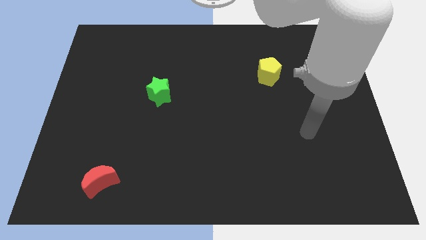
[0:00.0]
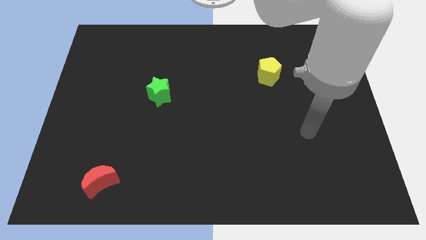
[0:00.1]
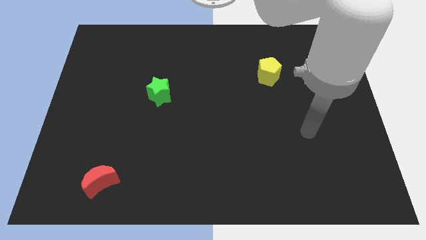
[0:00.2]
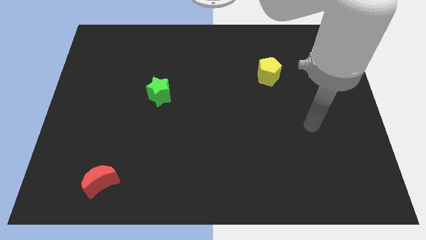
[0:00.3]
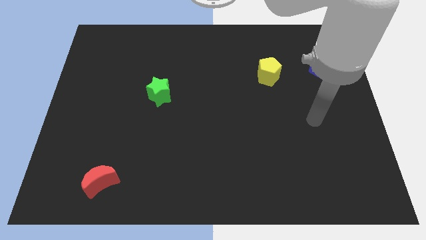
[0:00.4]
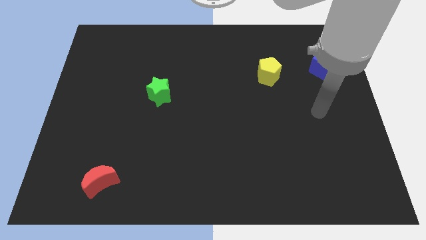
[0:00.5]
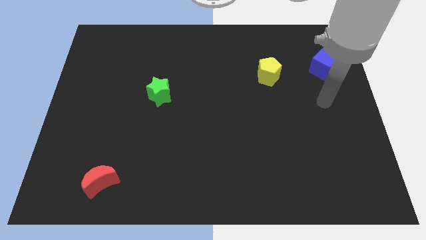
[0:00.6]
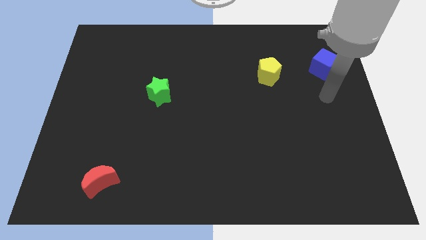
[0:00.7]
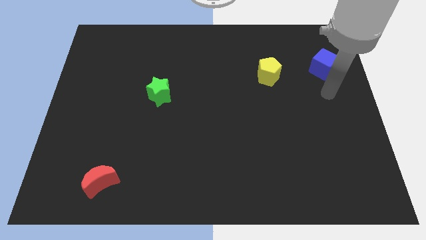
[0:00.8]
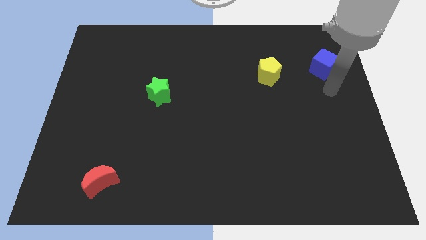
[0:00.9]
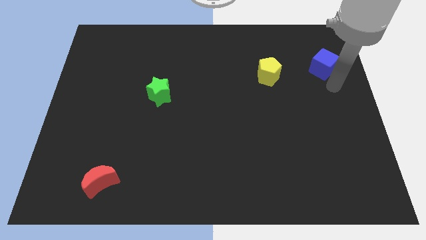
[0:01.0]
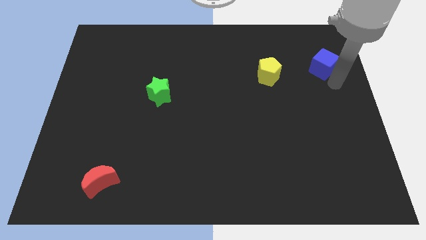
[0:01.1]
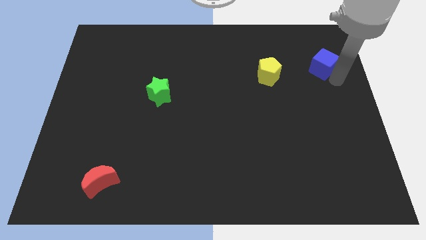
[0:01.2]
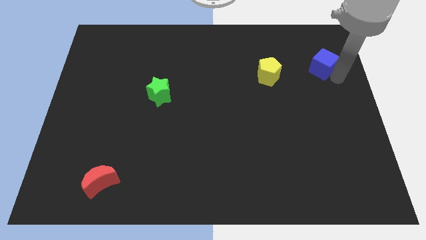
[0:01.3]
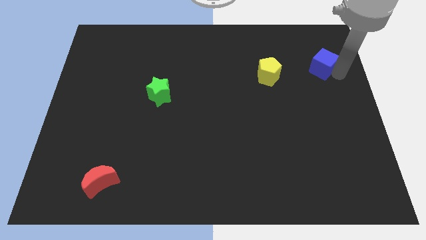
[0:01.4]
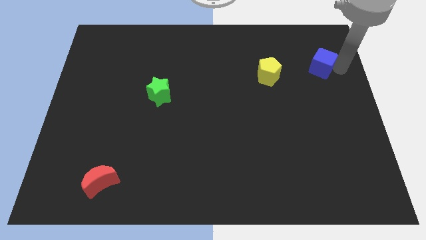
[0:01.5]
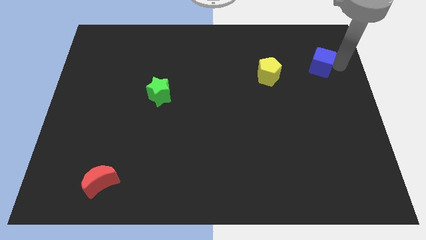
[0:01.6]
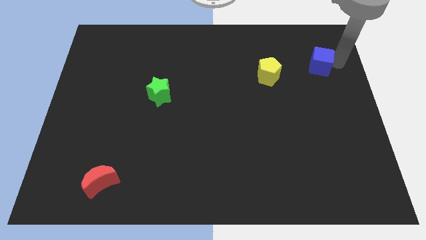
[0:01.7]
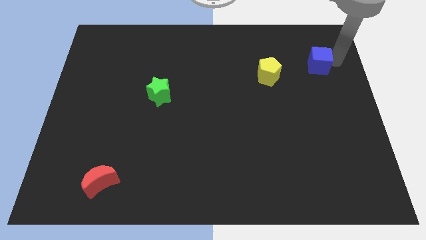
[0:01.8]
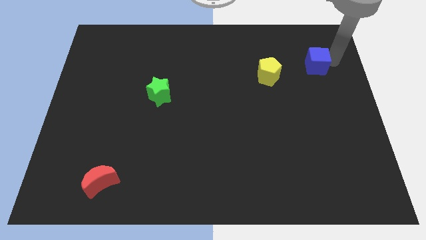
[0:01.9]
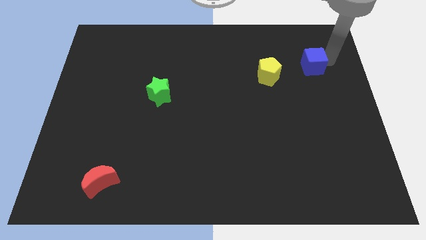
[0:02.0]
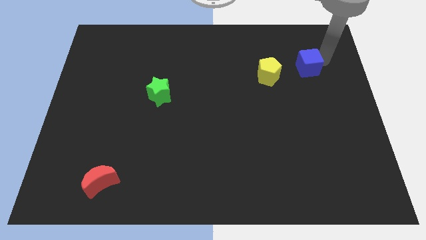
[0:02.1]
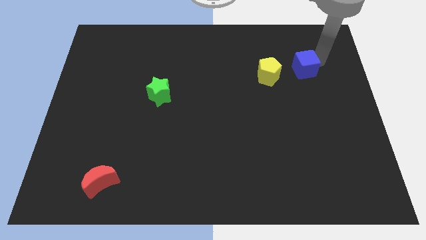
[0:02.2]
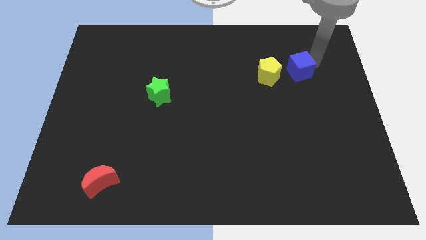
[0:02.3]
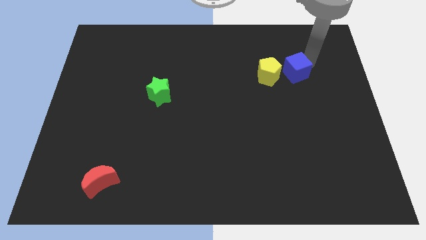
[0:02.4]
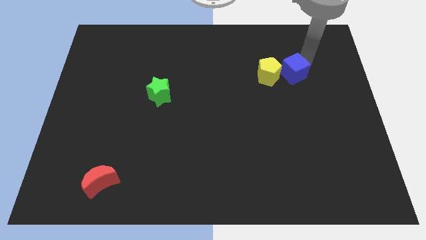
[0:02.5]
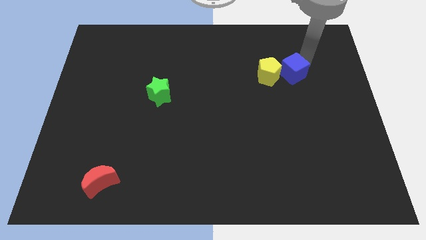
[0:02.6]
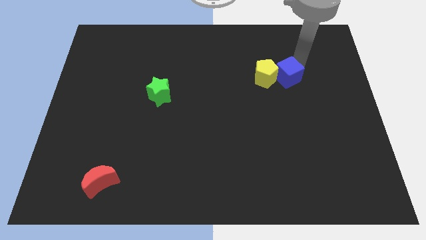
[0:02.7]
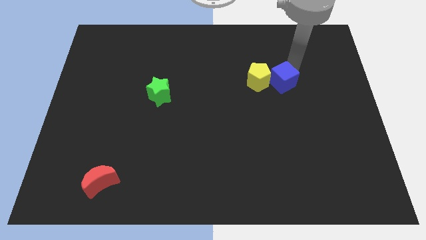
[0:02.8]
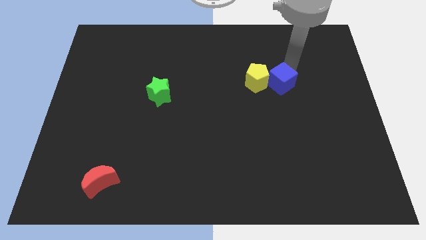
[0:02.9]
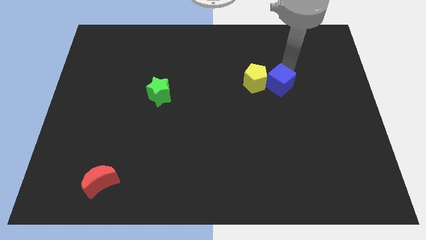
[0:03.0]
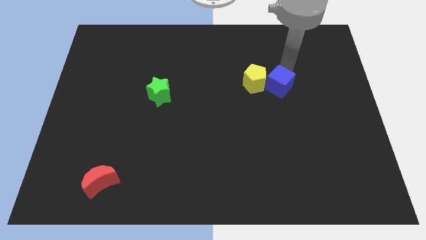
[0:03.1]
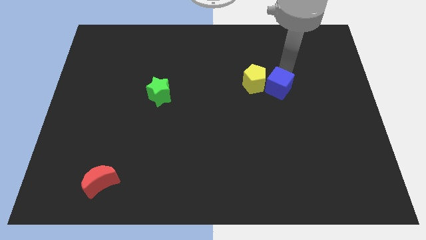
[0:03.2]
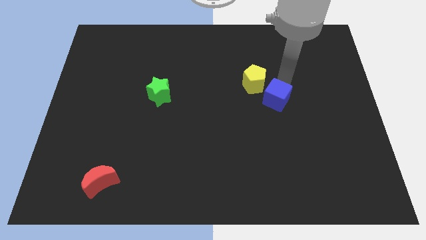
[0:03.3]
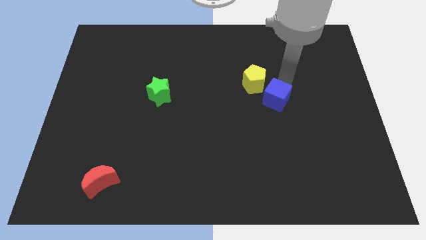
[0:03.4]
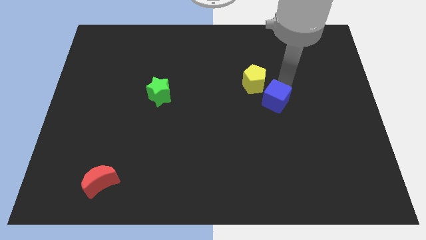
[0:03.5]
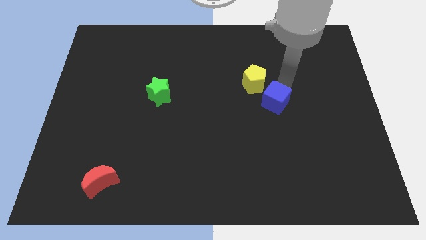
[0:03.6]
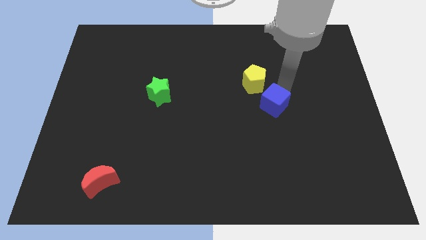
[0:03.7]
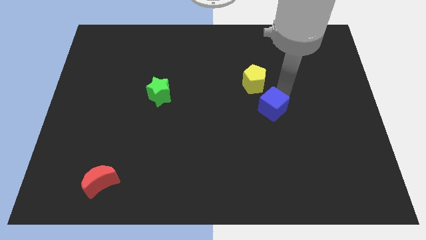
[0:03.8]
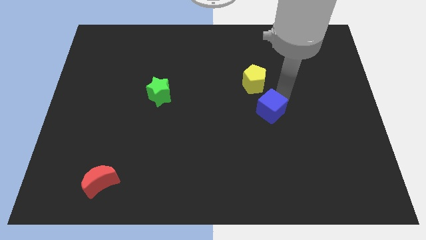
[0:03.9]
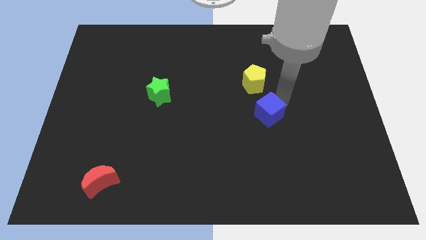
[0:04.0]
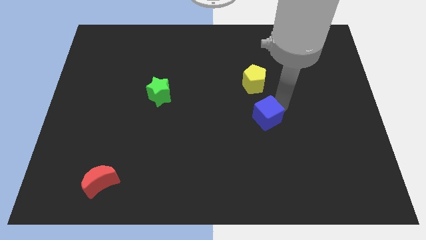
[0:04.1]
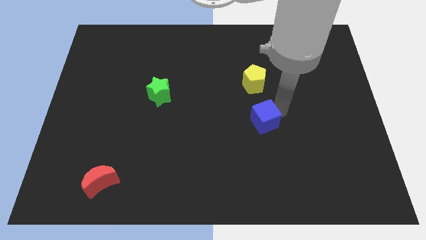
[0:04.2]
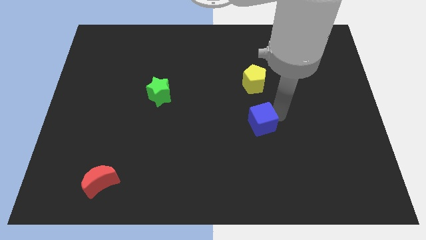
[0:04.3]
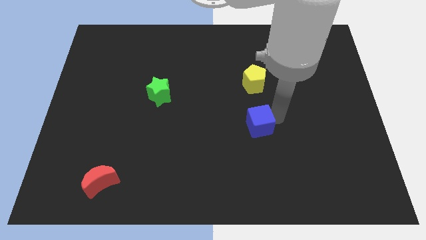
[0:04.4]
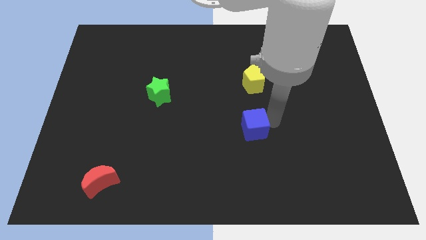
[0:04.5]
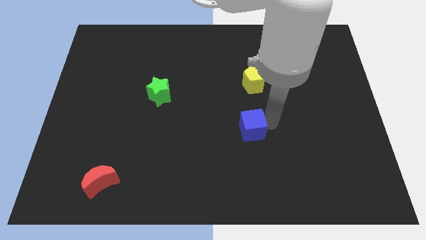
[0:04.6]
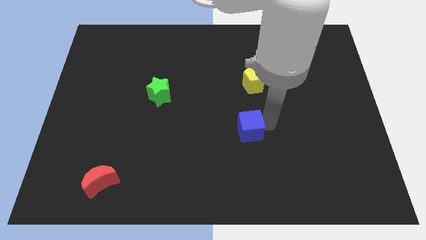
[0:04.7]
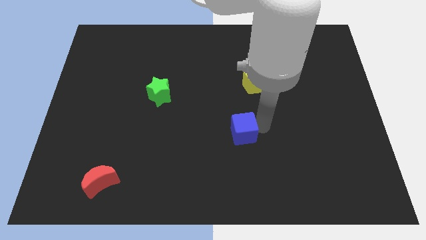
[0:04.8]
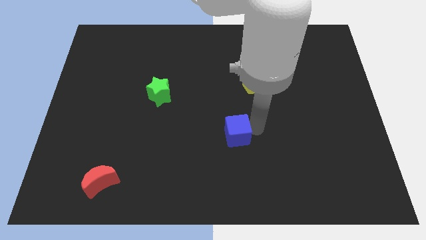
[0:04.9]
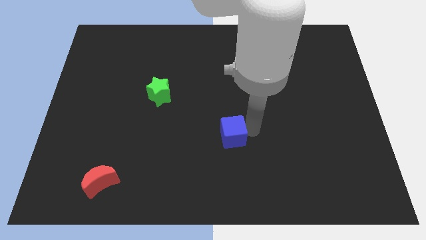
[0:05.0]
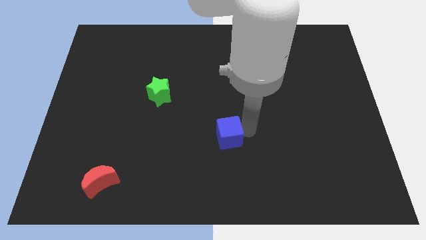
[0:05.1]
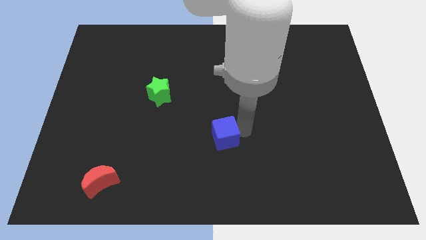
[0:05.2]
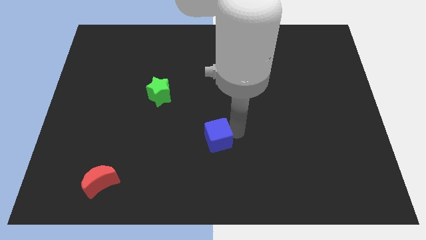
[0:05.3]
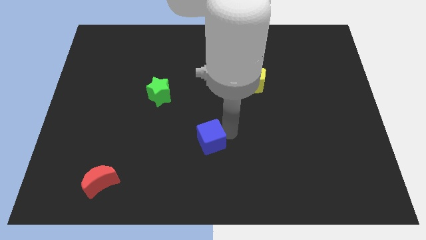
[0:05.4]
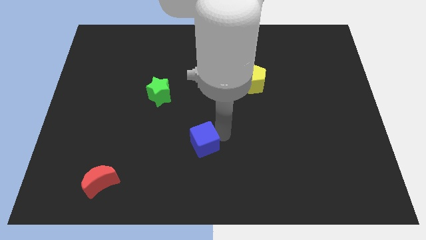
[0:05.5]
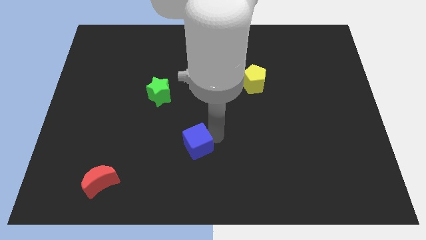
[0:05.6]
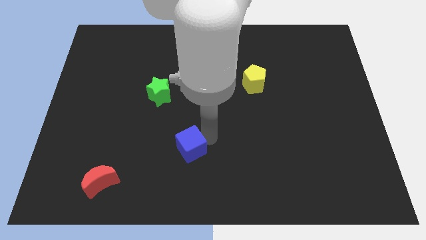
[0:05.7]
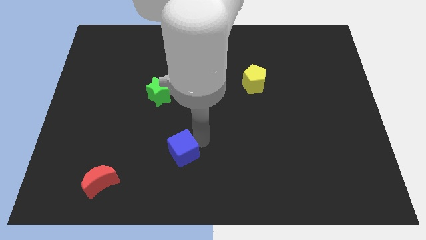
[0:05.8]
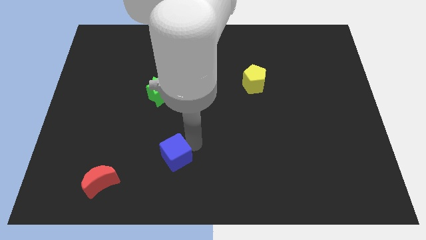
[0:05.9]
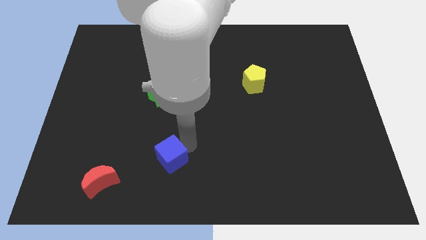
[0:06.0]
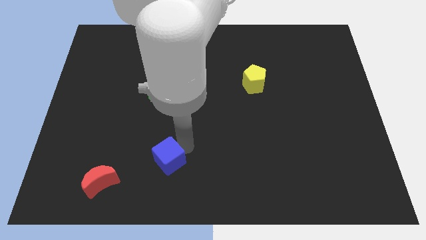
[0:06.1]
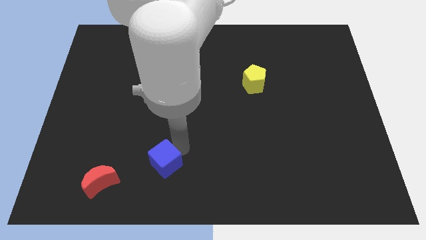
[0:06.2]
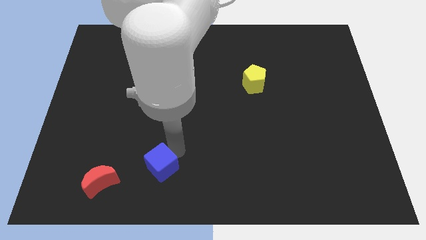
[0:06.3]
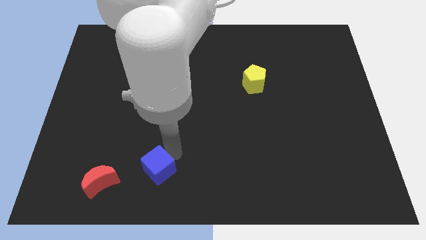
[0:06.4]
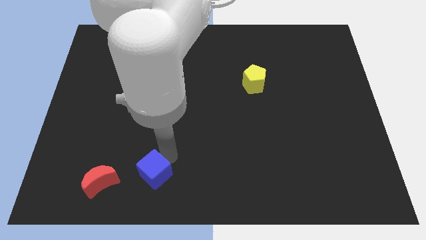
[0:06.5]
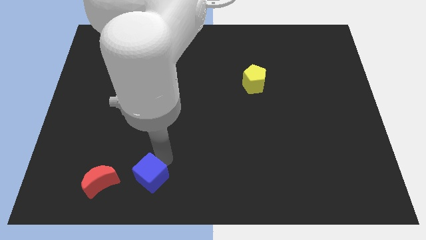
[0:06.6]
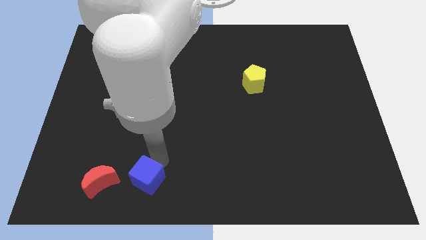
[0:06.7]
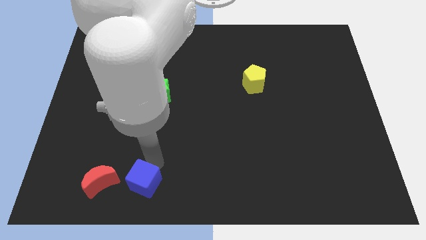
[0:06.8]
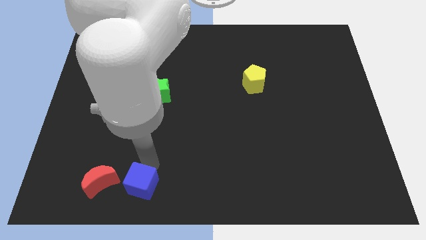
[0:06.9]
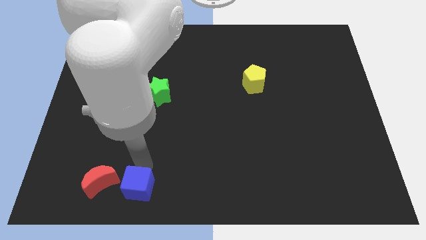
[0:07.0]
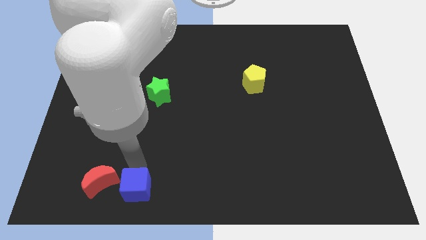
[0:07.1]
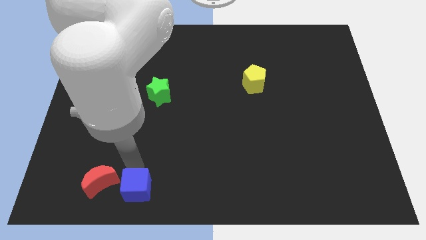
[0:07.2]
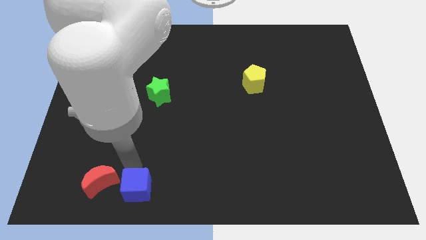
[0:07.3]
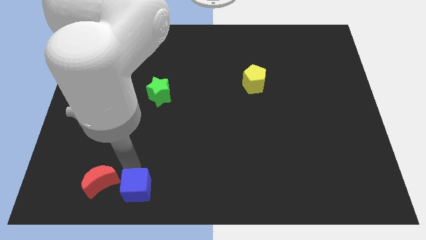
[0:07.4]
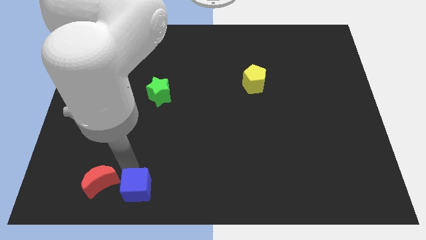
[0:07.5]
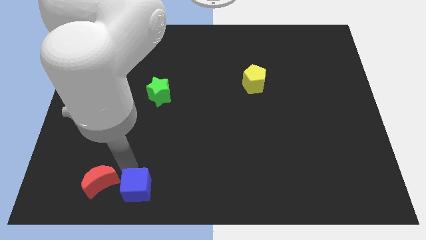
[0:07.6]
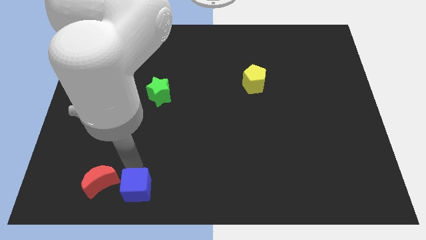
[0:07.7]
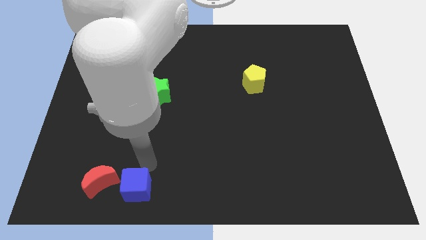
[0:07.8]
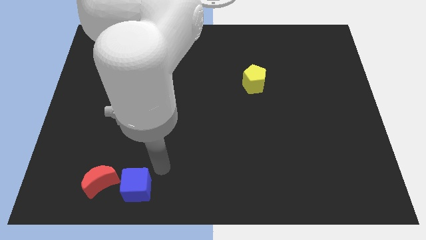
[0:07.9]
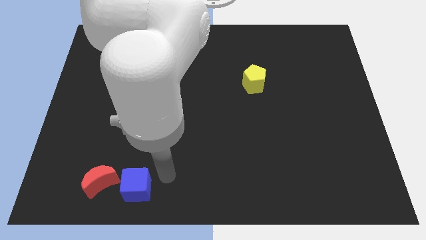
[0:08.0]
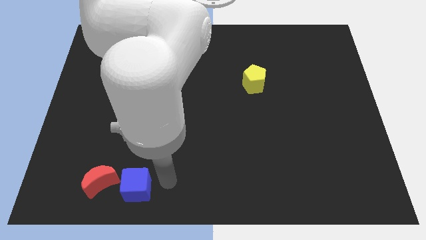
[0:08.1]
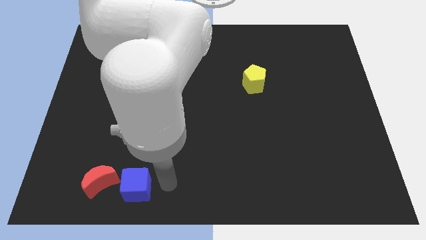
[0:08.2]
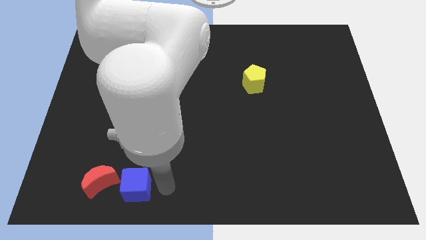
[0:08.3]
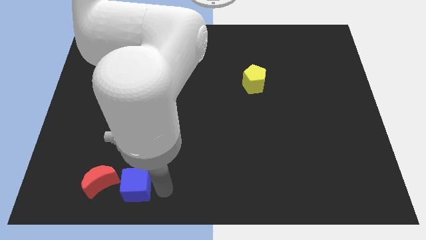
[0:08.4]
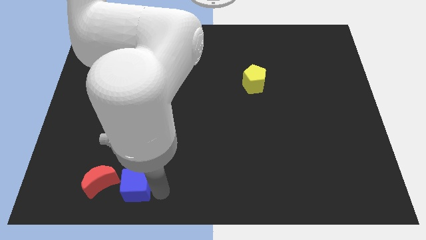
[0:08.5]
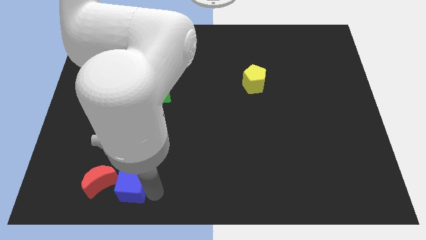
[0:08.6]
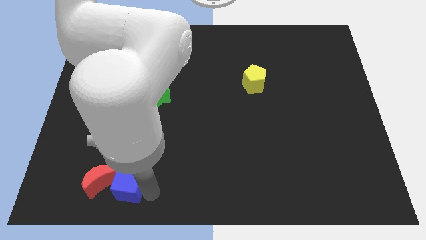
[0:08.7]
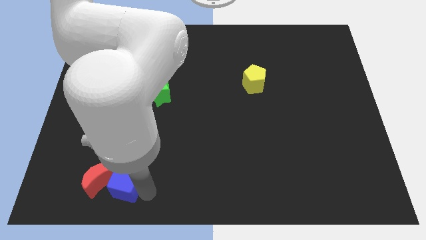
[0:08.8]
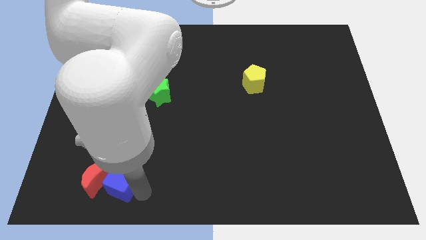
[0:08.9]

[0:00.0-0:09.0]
push the blue cube next to the red moon
